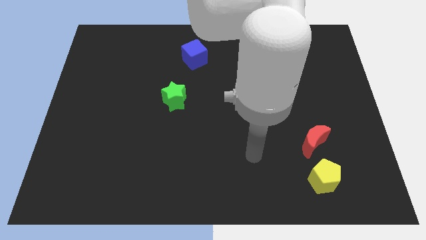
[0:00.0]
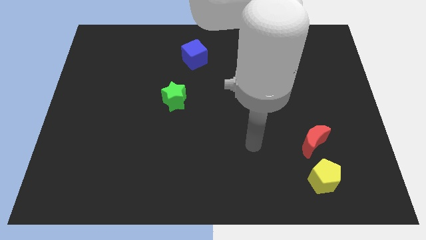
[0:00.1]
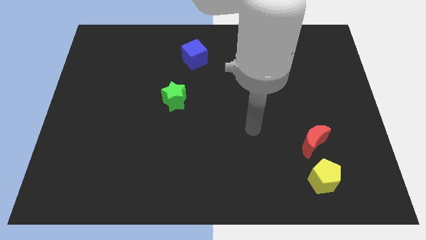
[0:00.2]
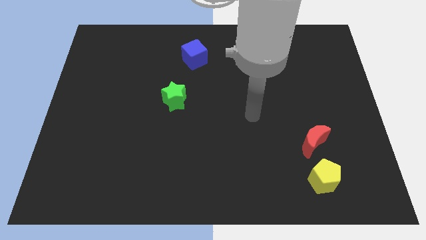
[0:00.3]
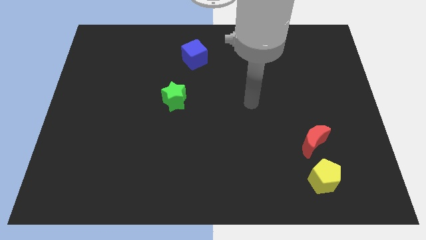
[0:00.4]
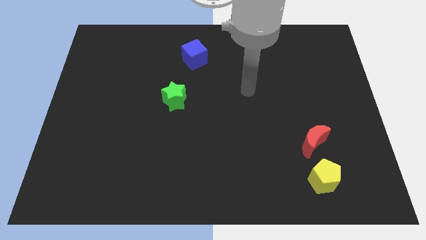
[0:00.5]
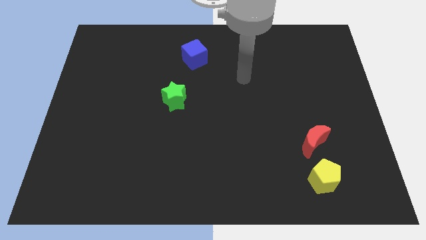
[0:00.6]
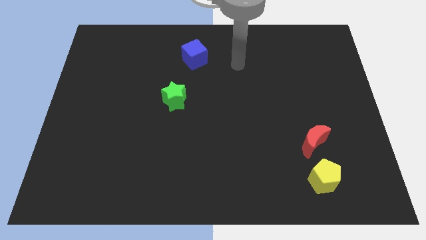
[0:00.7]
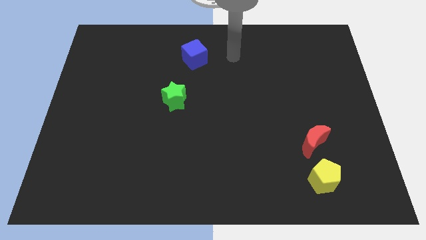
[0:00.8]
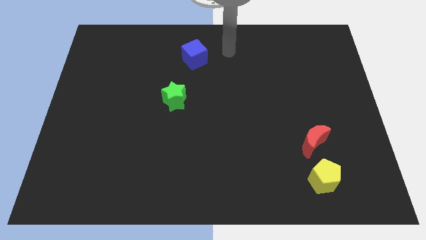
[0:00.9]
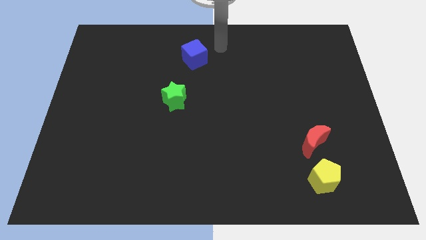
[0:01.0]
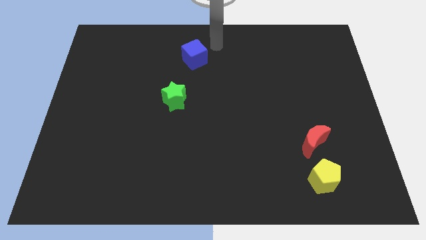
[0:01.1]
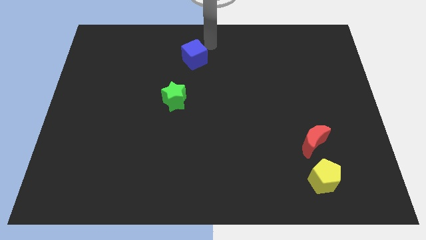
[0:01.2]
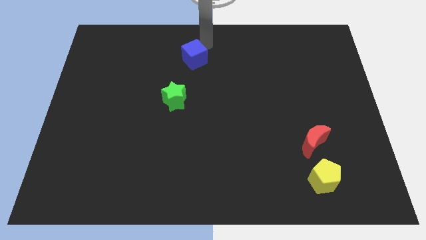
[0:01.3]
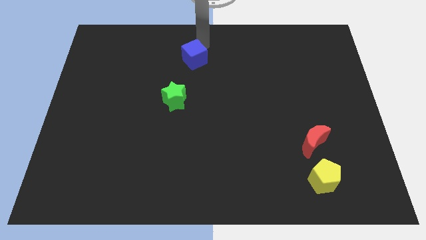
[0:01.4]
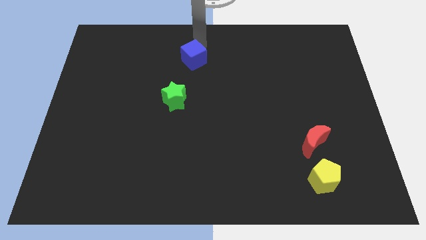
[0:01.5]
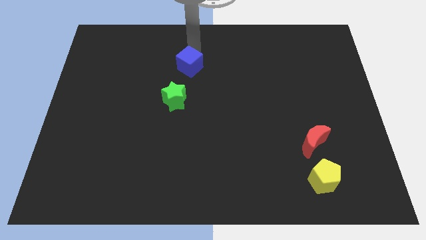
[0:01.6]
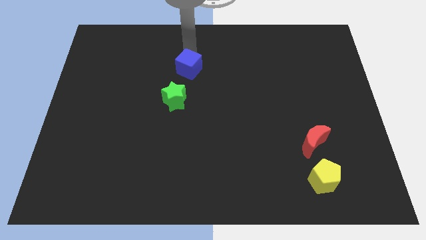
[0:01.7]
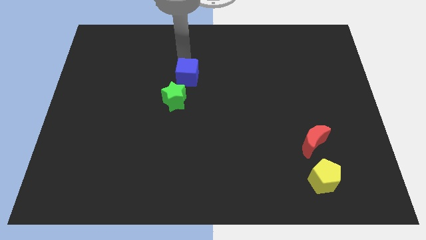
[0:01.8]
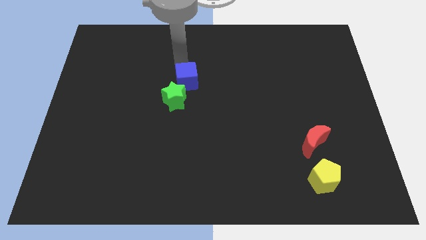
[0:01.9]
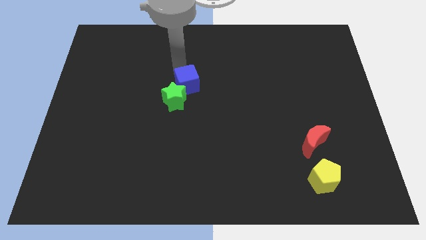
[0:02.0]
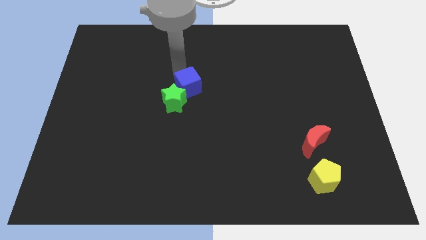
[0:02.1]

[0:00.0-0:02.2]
put the blue block close to the green block

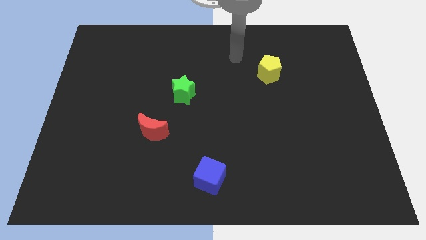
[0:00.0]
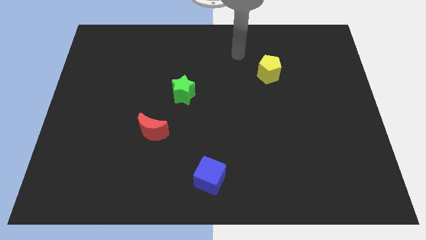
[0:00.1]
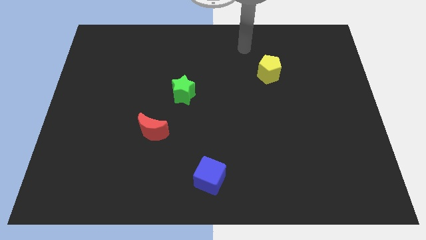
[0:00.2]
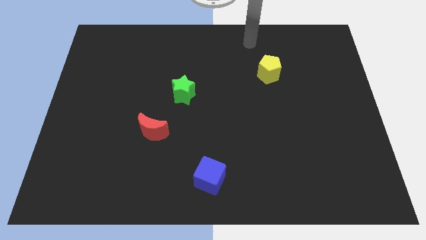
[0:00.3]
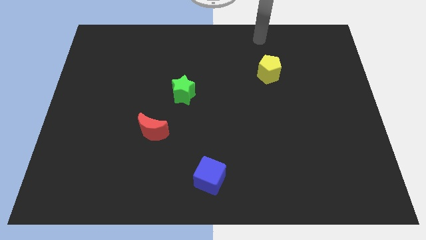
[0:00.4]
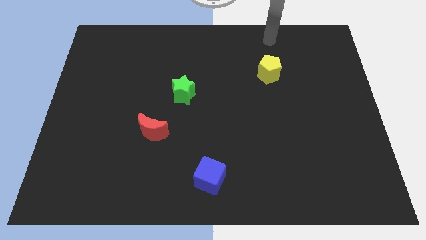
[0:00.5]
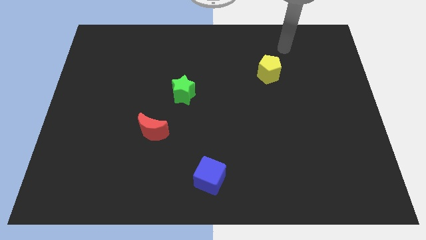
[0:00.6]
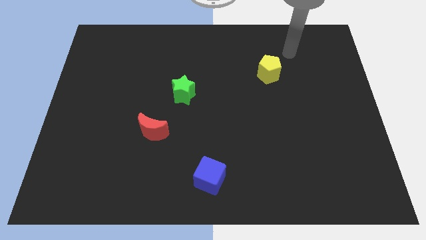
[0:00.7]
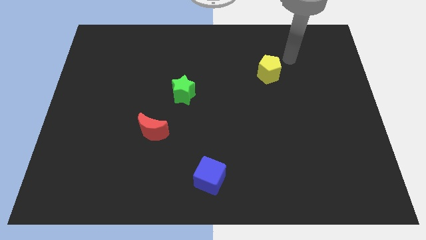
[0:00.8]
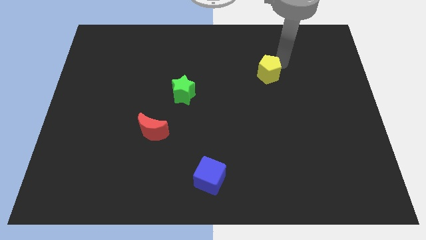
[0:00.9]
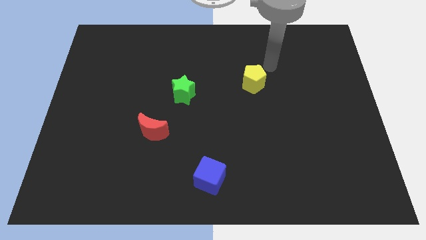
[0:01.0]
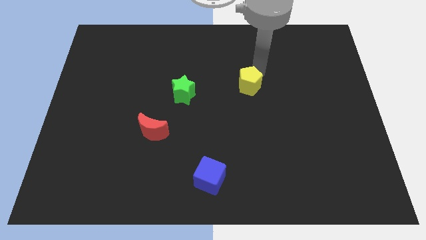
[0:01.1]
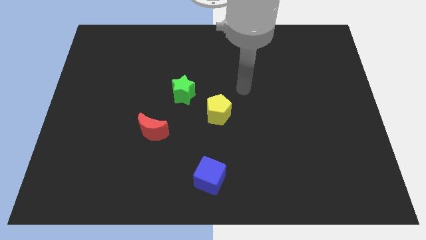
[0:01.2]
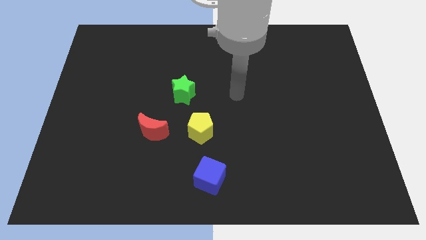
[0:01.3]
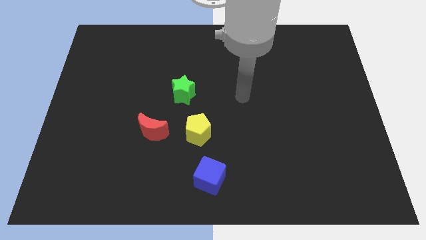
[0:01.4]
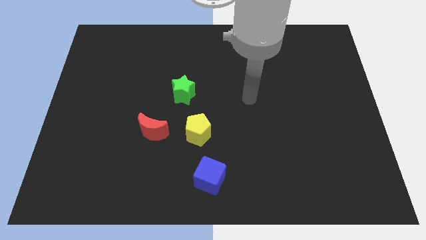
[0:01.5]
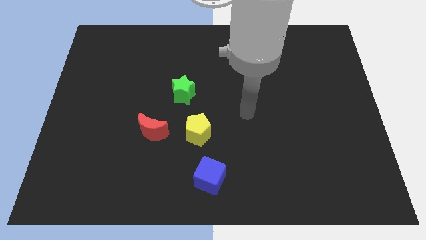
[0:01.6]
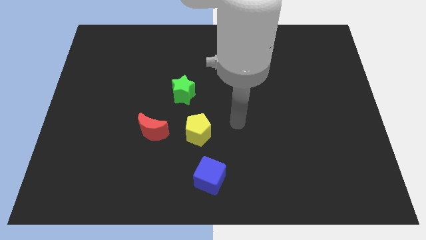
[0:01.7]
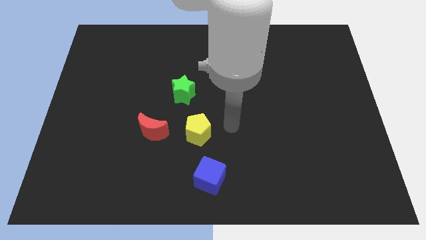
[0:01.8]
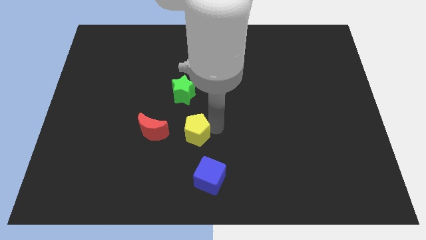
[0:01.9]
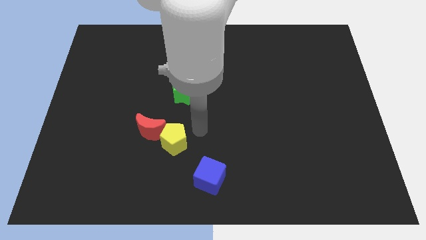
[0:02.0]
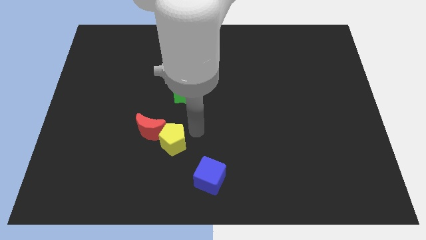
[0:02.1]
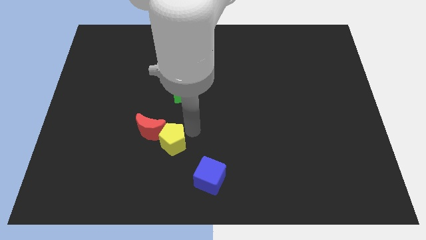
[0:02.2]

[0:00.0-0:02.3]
put the pentagon to the moon

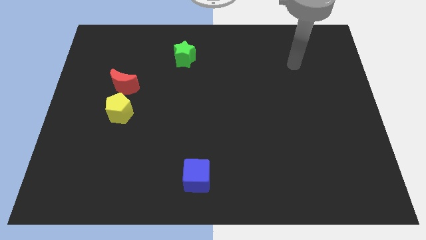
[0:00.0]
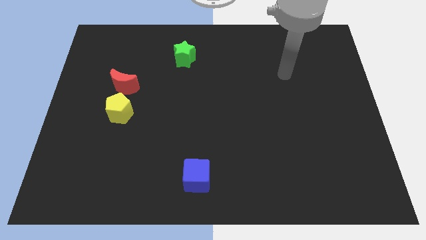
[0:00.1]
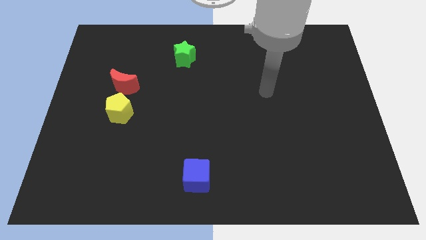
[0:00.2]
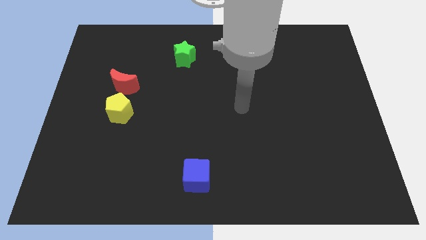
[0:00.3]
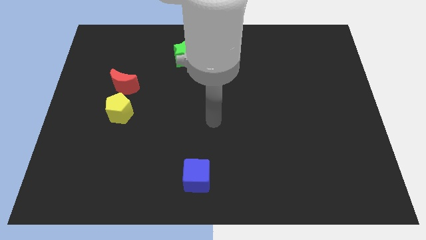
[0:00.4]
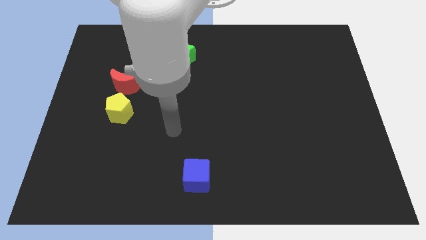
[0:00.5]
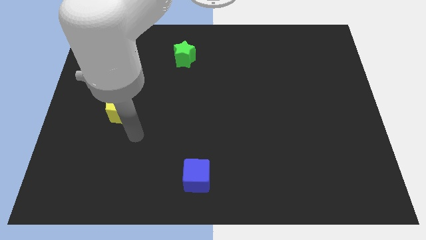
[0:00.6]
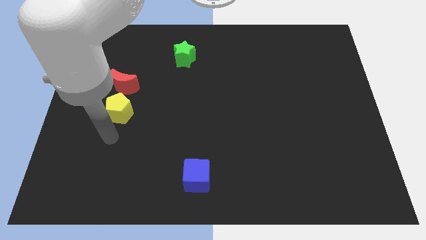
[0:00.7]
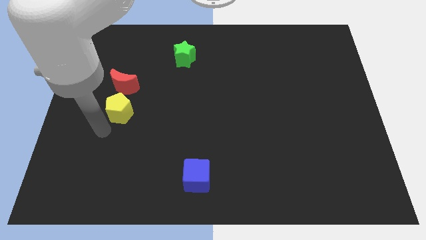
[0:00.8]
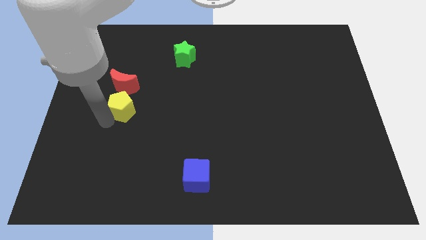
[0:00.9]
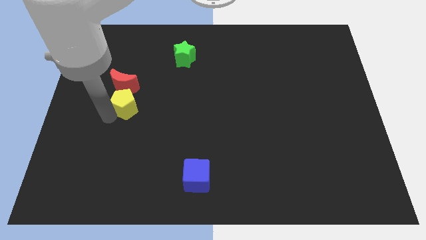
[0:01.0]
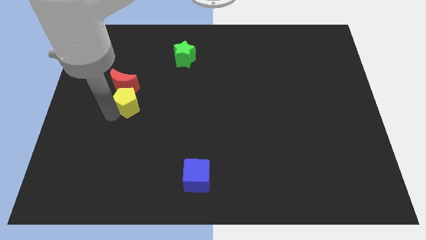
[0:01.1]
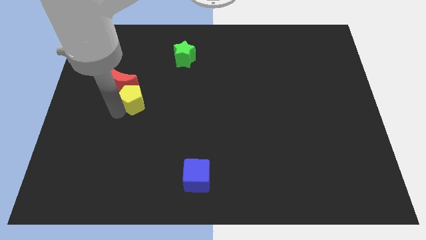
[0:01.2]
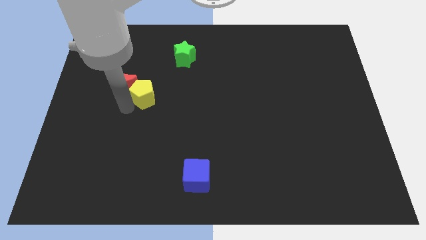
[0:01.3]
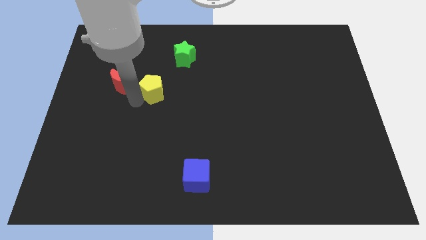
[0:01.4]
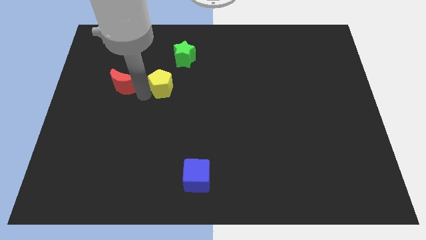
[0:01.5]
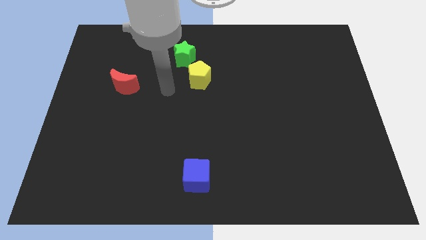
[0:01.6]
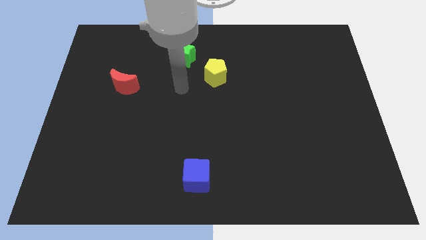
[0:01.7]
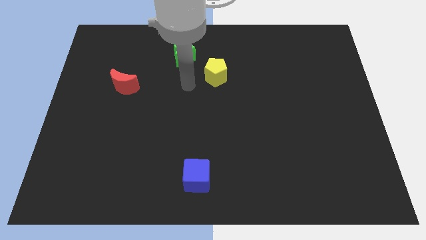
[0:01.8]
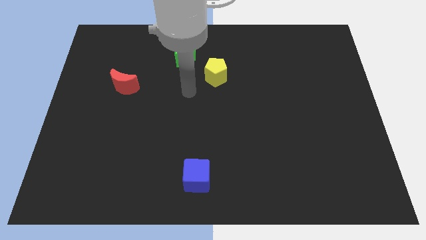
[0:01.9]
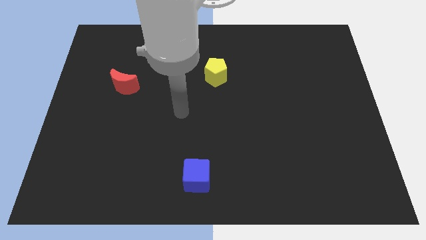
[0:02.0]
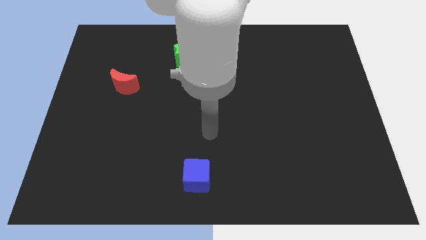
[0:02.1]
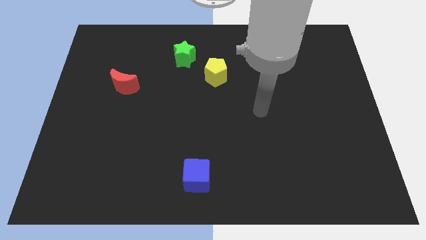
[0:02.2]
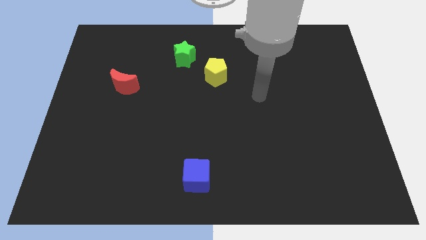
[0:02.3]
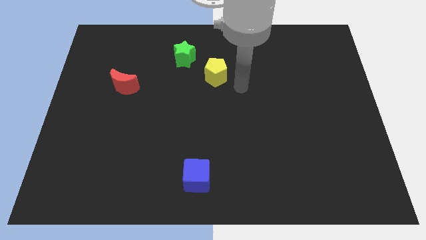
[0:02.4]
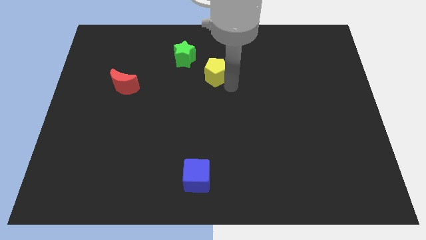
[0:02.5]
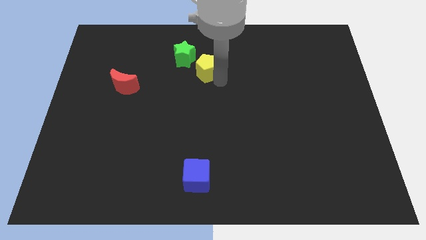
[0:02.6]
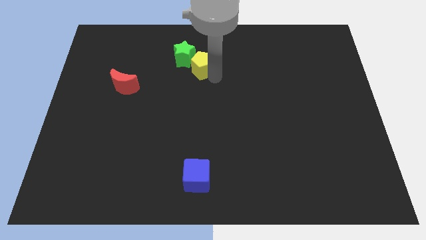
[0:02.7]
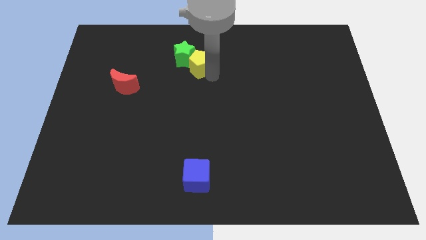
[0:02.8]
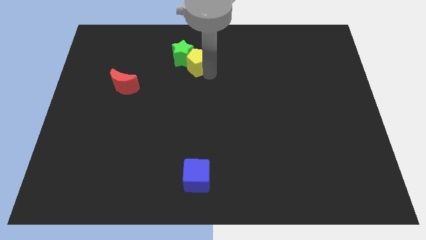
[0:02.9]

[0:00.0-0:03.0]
put the pentagon next to the green block

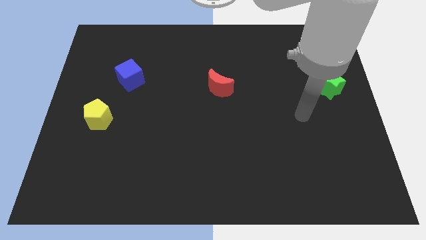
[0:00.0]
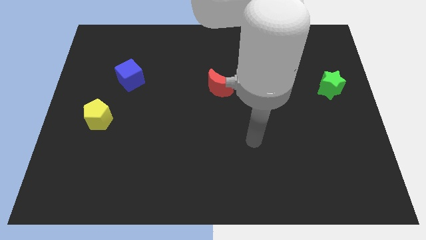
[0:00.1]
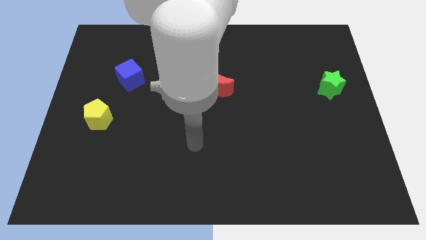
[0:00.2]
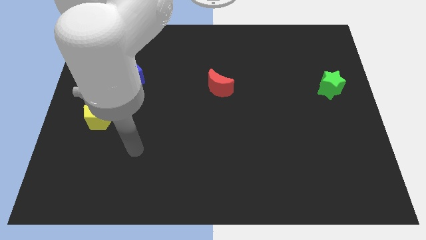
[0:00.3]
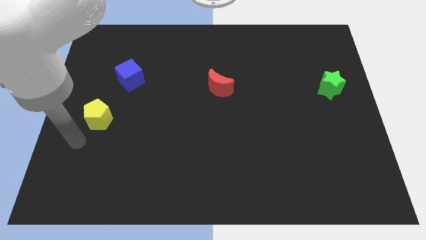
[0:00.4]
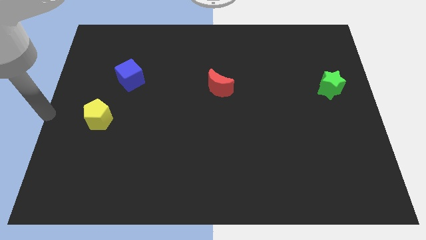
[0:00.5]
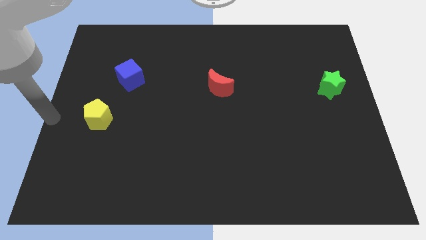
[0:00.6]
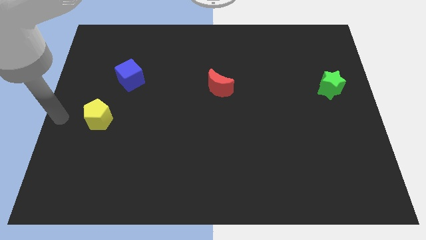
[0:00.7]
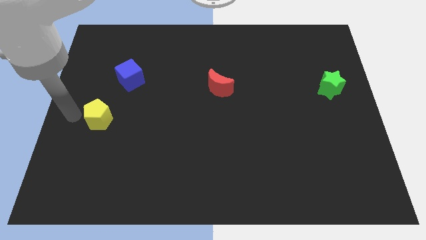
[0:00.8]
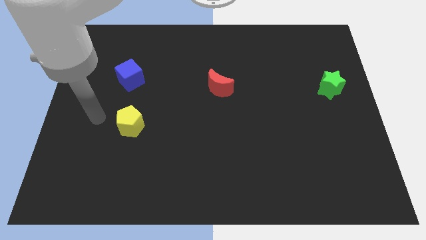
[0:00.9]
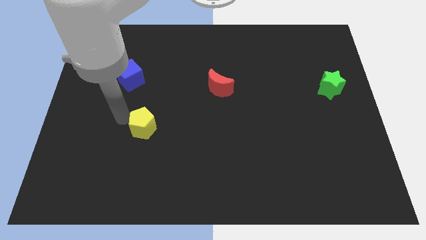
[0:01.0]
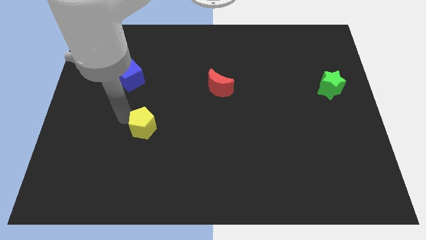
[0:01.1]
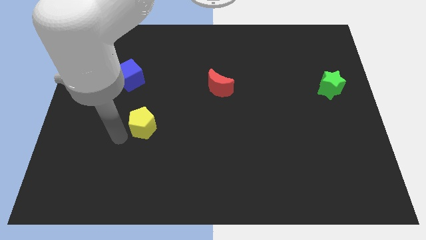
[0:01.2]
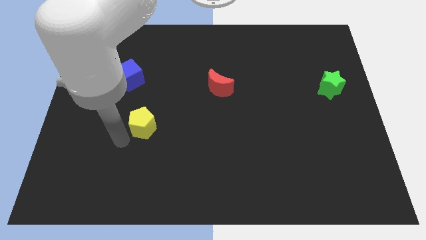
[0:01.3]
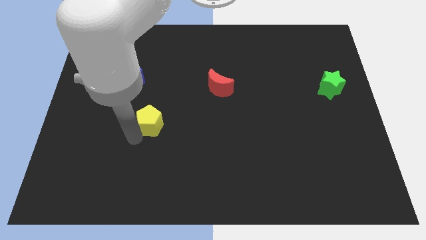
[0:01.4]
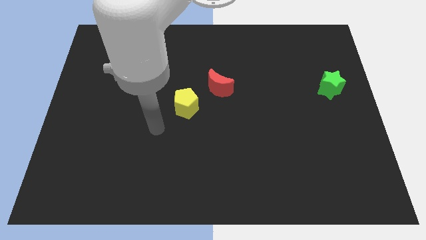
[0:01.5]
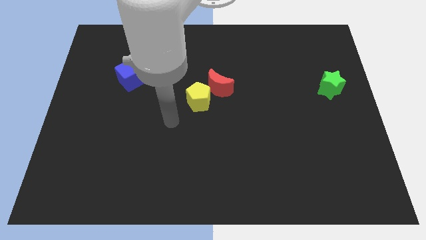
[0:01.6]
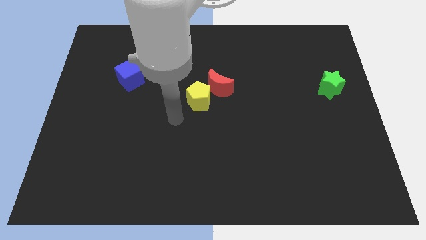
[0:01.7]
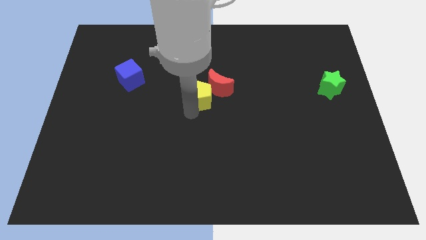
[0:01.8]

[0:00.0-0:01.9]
put the yellow pentagon close to the red block
